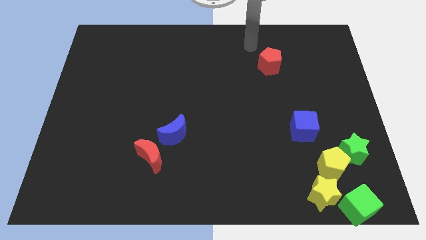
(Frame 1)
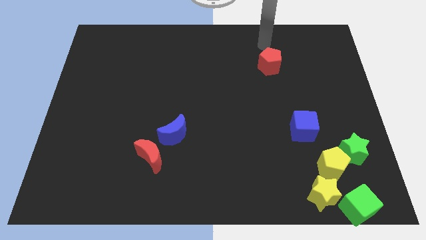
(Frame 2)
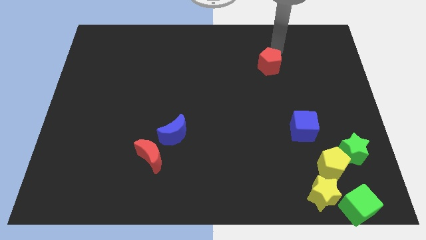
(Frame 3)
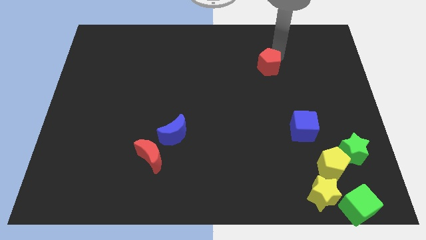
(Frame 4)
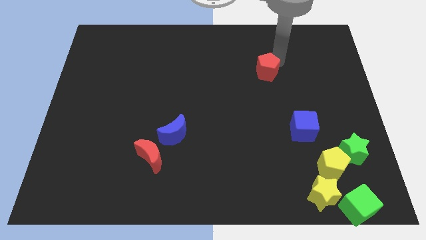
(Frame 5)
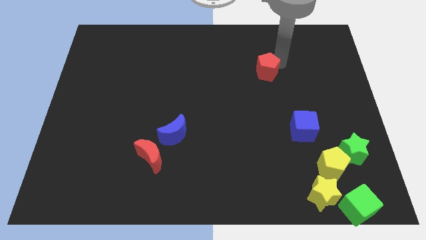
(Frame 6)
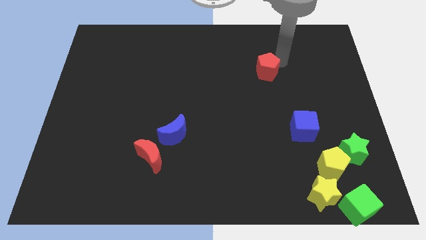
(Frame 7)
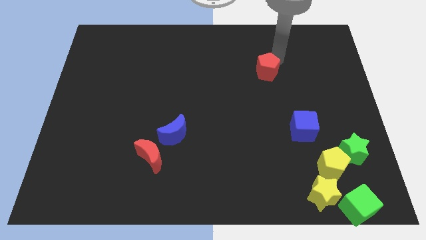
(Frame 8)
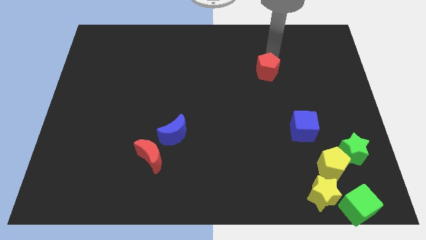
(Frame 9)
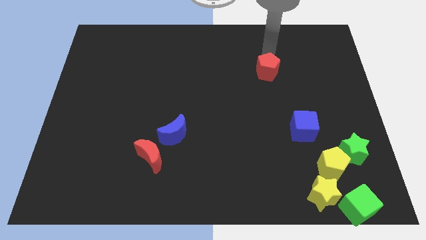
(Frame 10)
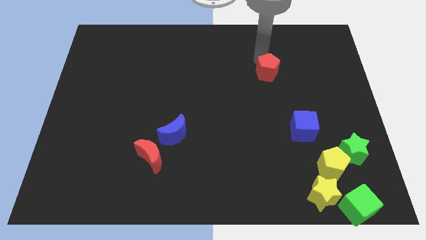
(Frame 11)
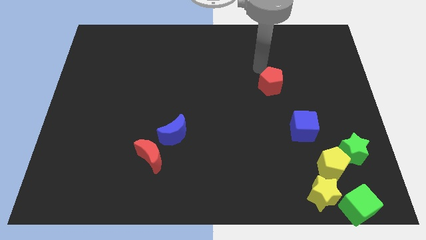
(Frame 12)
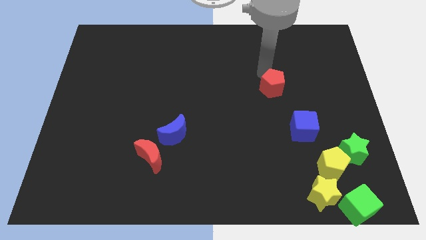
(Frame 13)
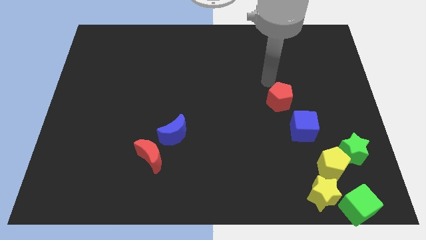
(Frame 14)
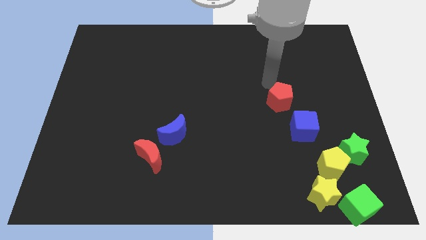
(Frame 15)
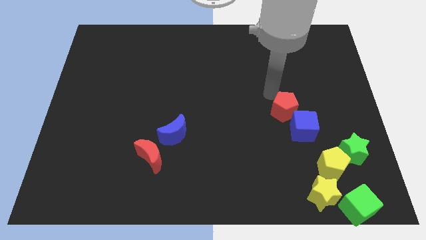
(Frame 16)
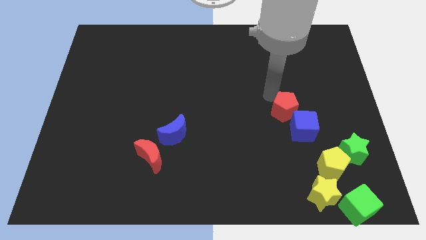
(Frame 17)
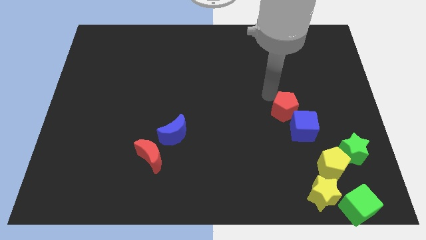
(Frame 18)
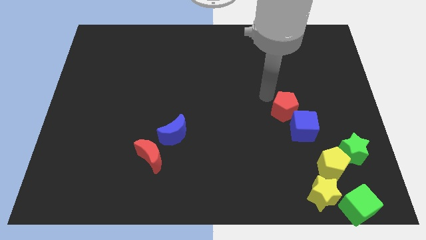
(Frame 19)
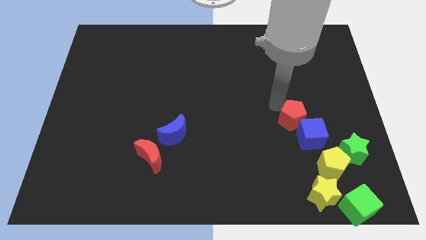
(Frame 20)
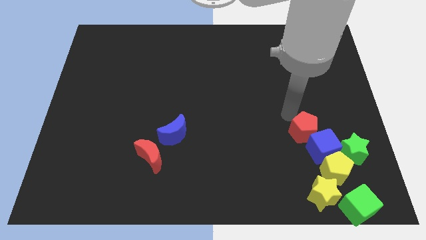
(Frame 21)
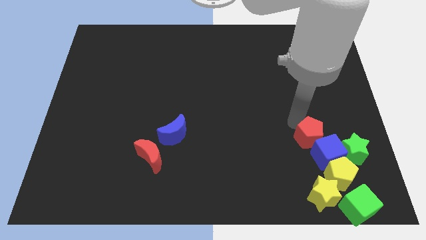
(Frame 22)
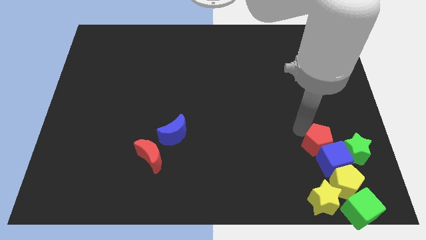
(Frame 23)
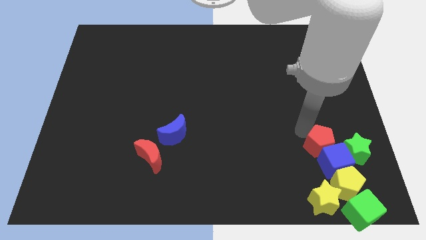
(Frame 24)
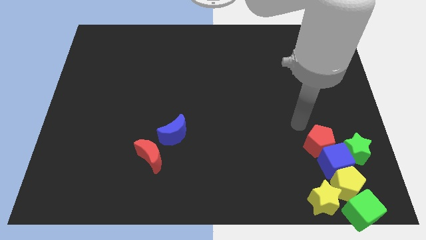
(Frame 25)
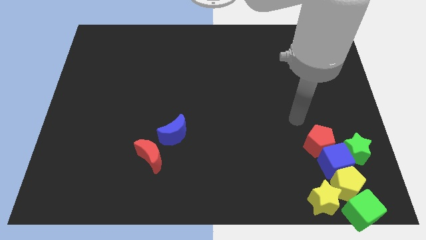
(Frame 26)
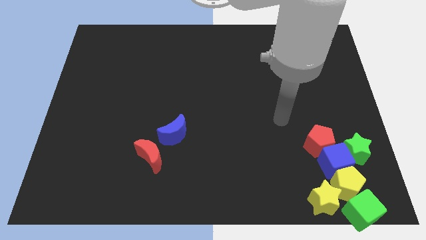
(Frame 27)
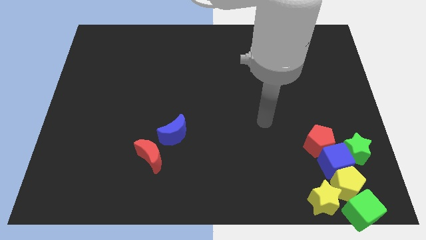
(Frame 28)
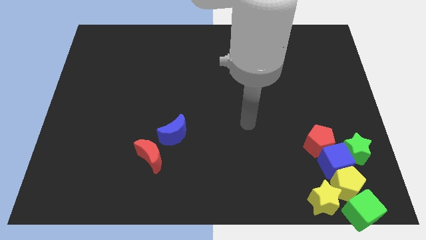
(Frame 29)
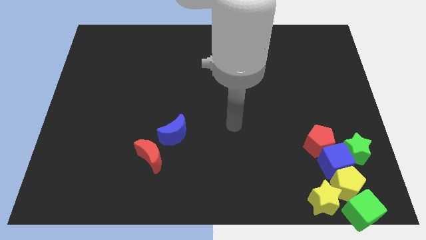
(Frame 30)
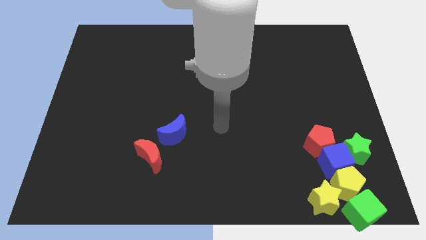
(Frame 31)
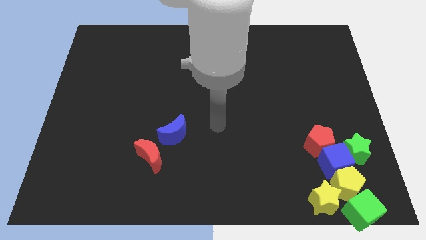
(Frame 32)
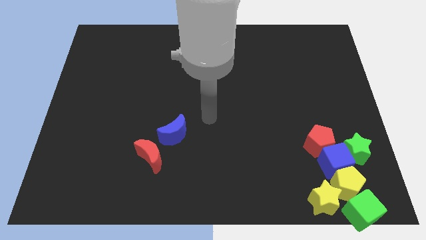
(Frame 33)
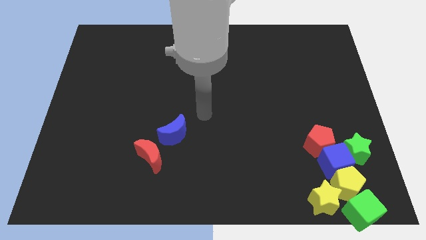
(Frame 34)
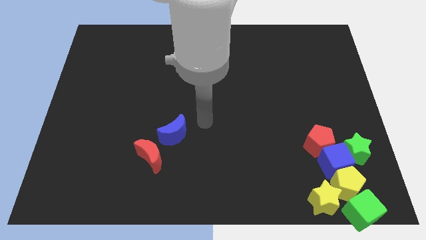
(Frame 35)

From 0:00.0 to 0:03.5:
push the red pentagon along with blue cube into the yellow pentagon

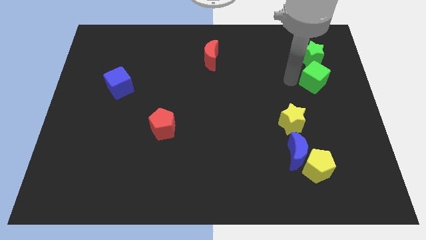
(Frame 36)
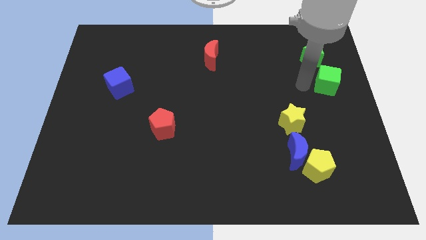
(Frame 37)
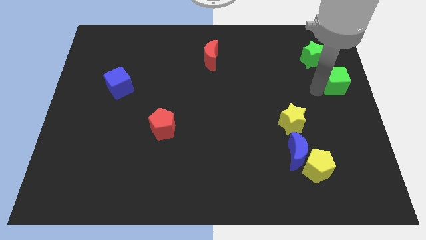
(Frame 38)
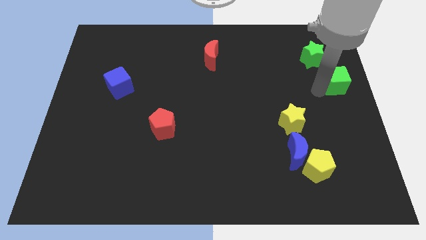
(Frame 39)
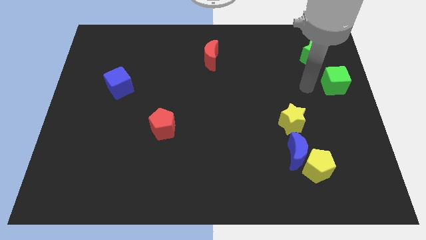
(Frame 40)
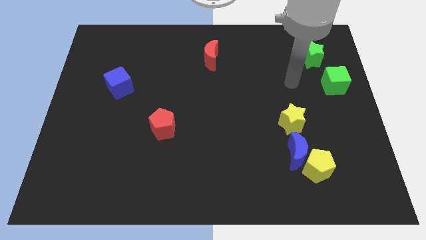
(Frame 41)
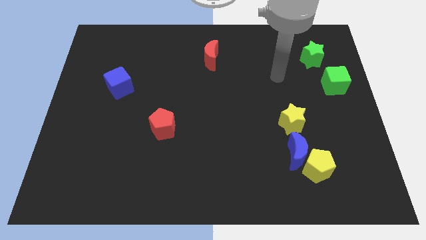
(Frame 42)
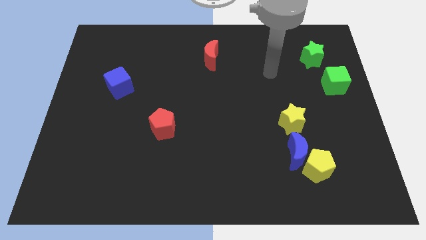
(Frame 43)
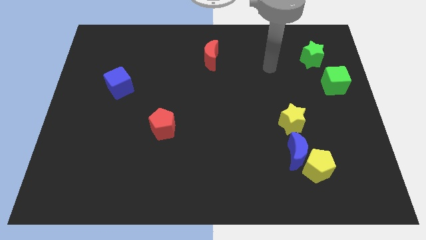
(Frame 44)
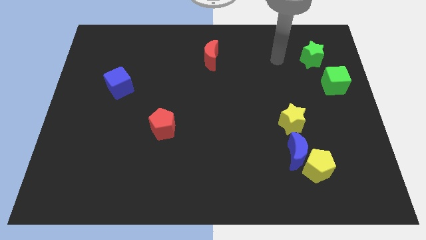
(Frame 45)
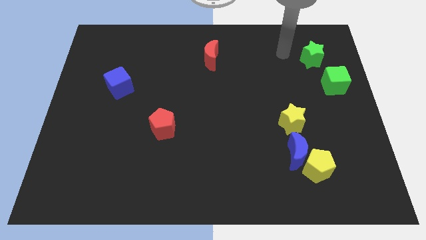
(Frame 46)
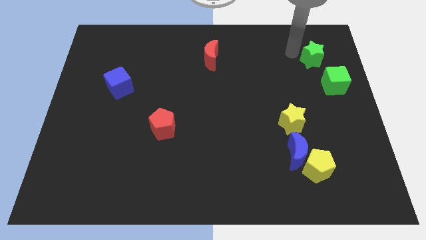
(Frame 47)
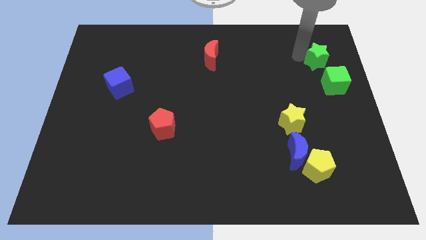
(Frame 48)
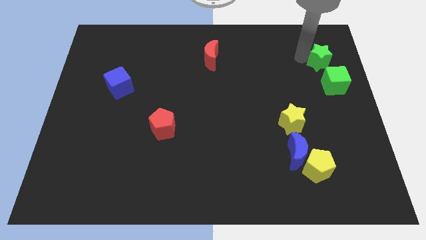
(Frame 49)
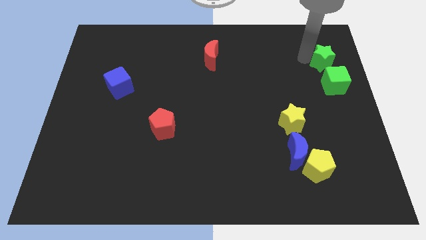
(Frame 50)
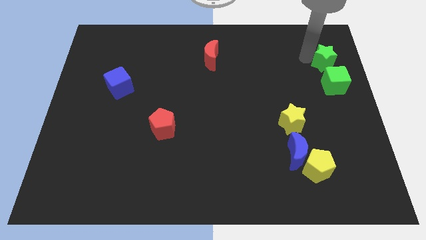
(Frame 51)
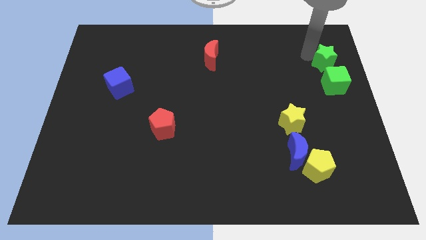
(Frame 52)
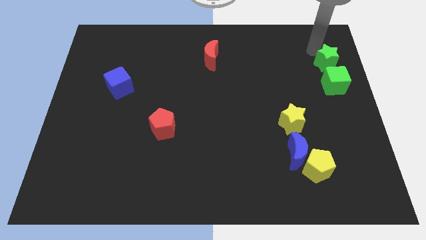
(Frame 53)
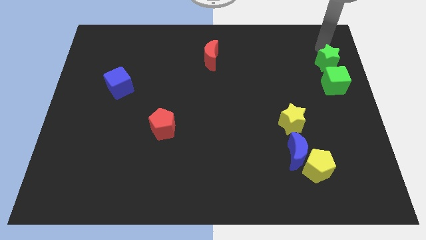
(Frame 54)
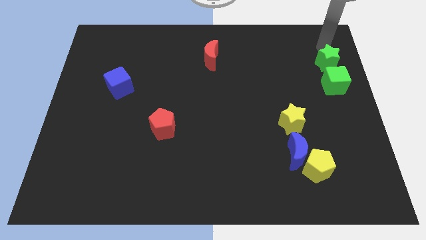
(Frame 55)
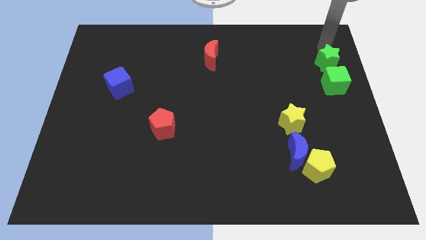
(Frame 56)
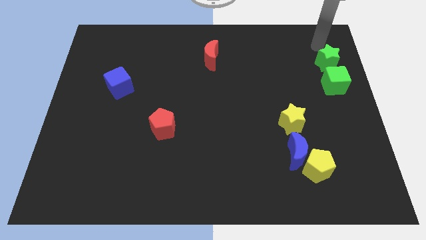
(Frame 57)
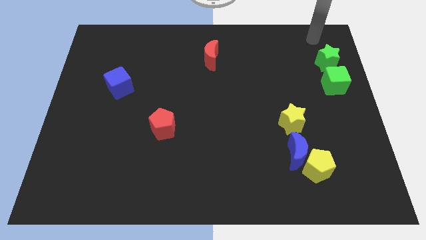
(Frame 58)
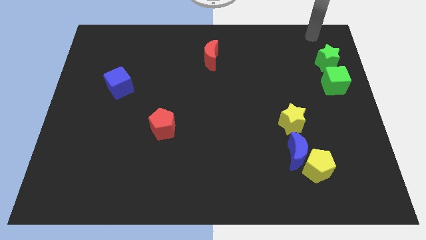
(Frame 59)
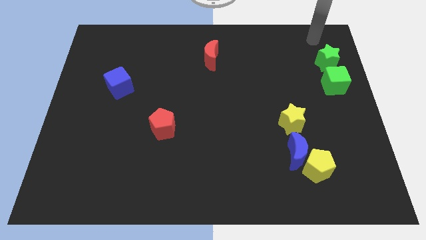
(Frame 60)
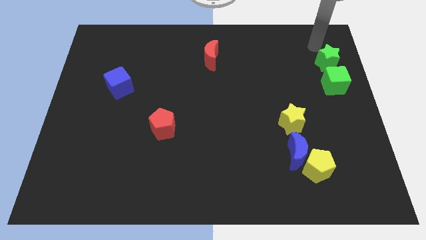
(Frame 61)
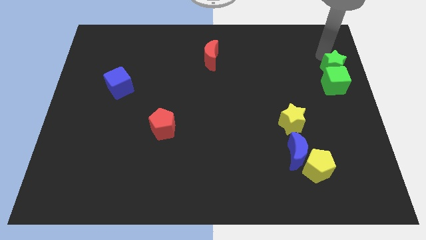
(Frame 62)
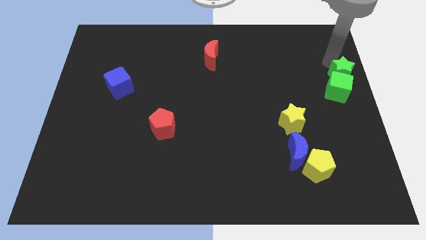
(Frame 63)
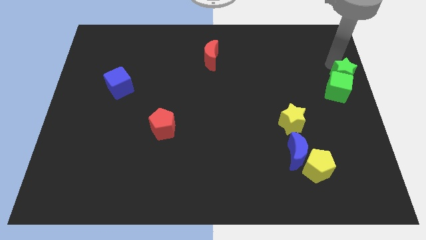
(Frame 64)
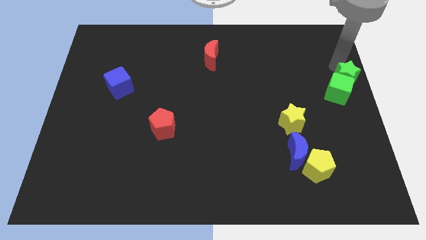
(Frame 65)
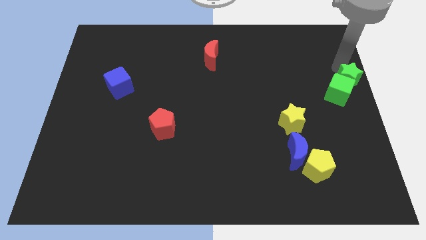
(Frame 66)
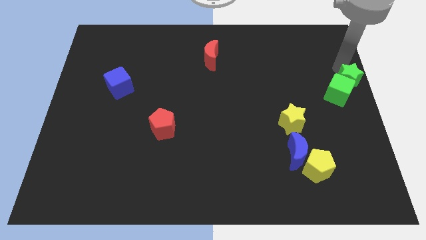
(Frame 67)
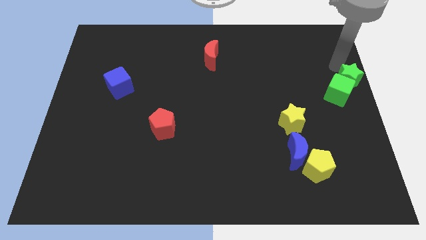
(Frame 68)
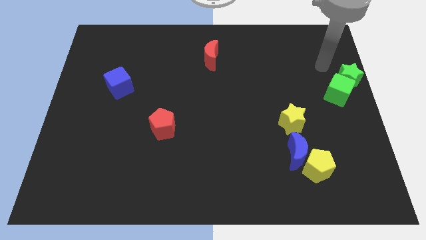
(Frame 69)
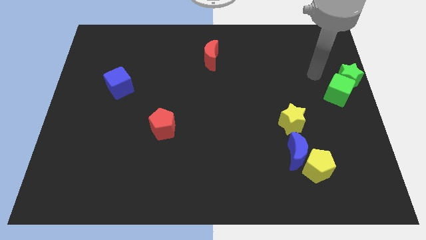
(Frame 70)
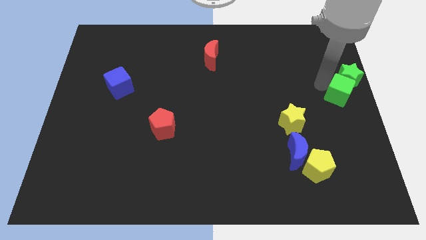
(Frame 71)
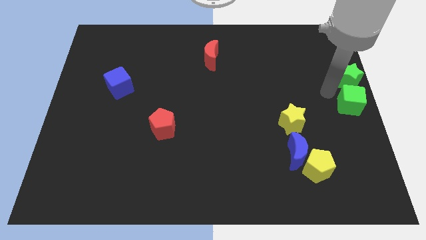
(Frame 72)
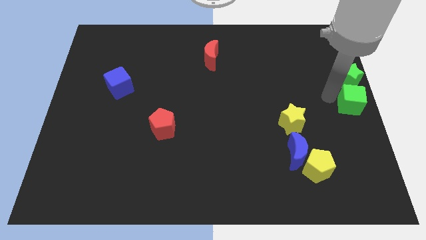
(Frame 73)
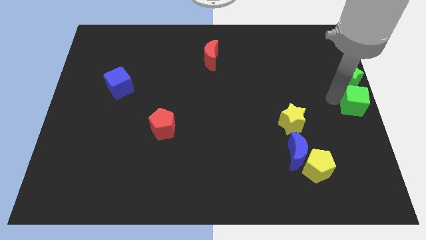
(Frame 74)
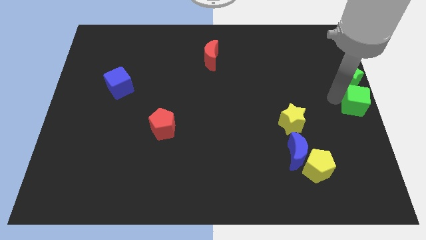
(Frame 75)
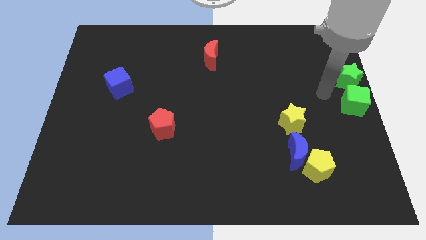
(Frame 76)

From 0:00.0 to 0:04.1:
place the green blocks at the center right side of the board

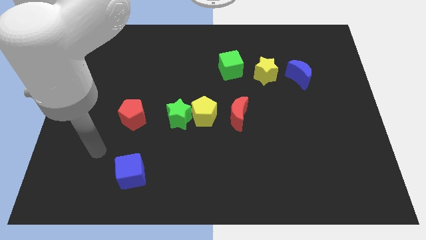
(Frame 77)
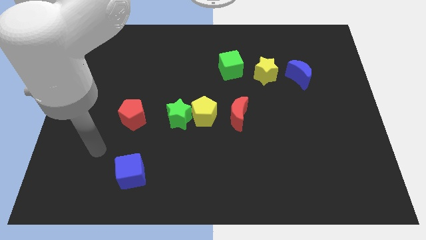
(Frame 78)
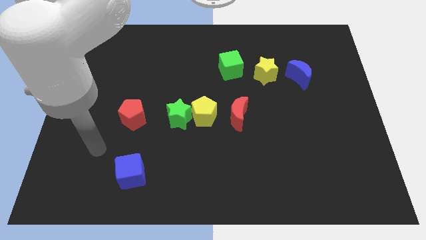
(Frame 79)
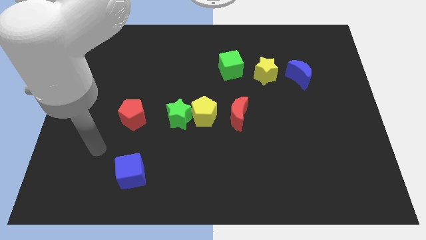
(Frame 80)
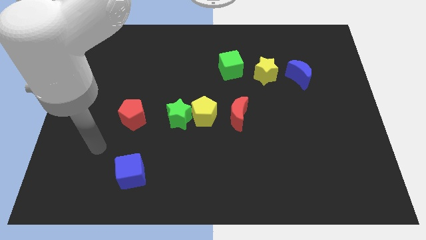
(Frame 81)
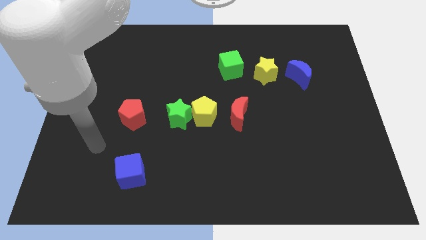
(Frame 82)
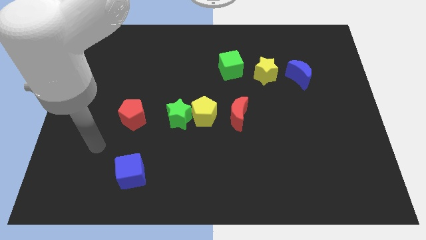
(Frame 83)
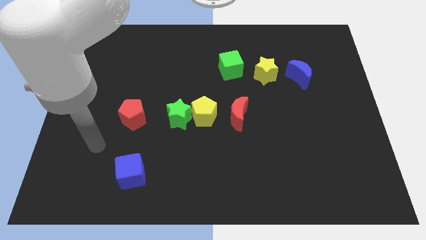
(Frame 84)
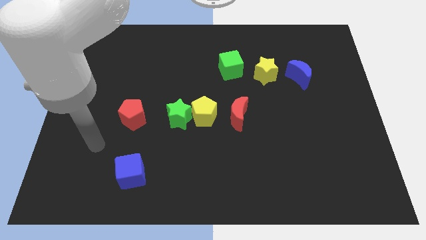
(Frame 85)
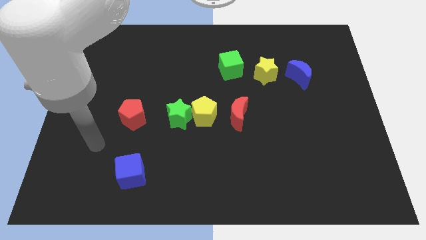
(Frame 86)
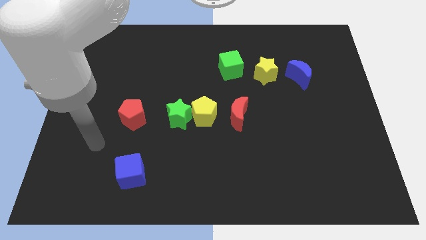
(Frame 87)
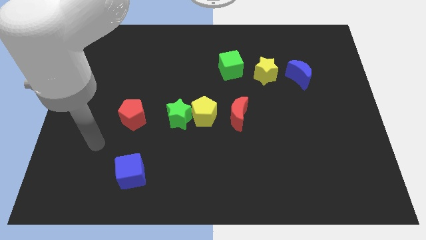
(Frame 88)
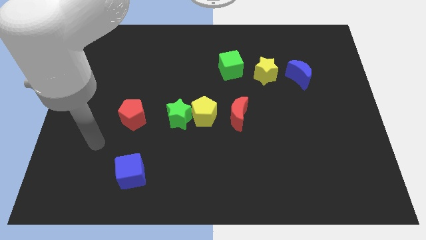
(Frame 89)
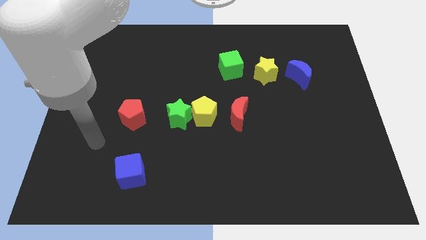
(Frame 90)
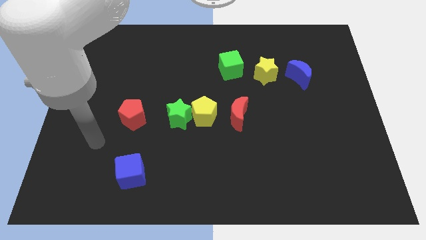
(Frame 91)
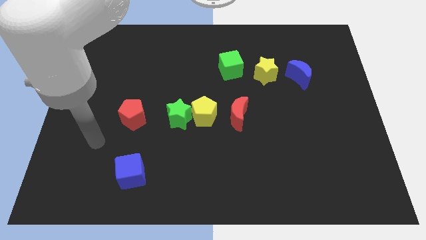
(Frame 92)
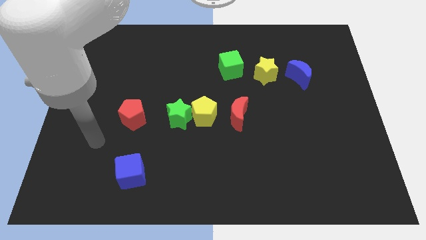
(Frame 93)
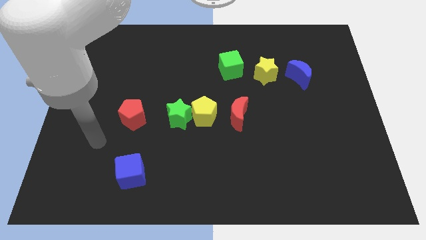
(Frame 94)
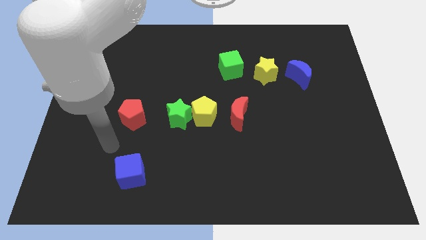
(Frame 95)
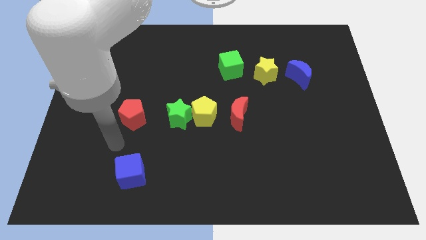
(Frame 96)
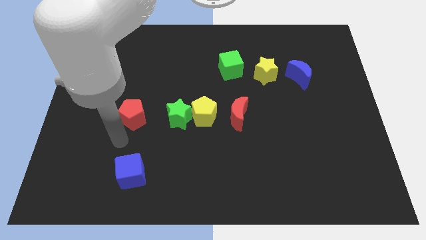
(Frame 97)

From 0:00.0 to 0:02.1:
move the arm to the red pentagon
